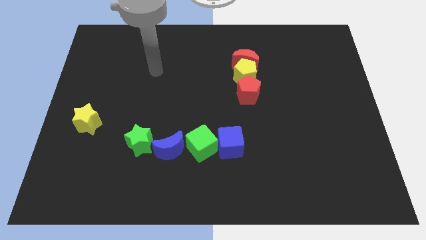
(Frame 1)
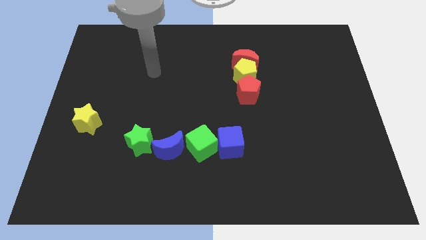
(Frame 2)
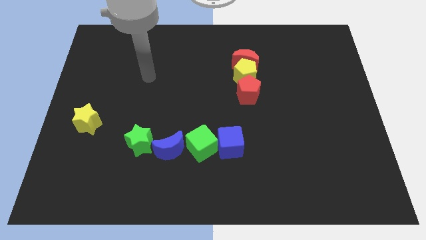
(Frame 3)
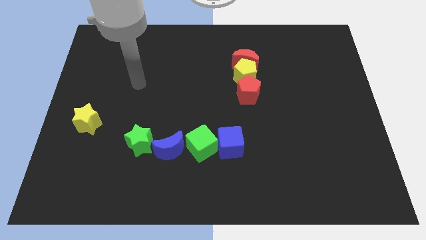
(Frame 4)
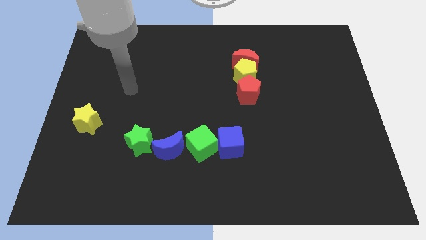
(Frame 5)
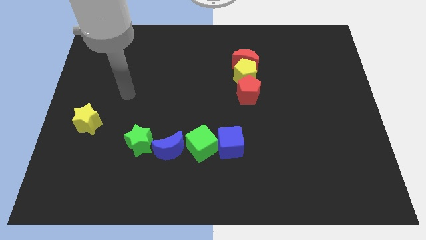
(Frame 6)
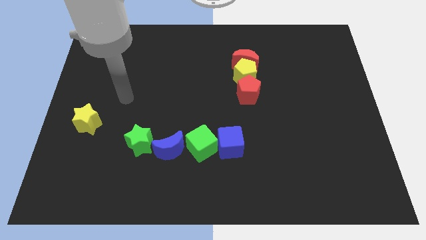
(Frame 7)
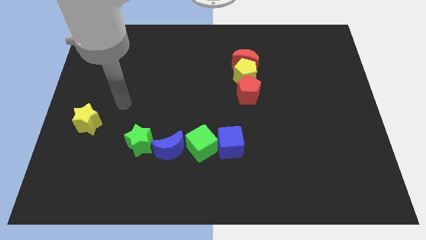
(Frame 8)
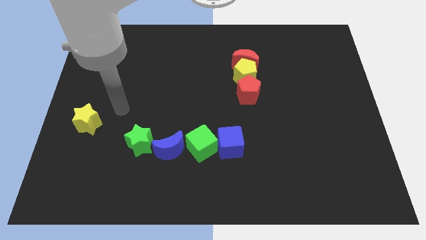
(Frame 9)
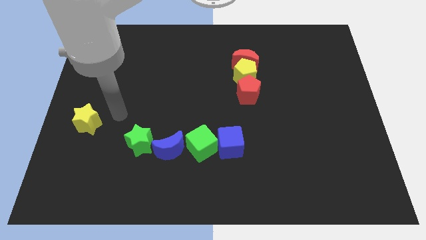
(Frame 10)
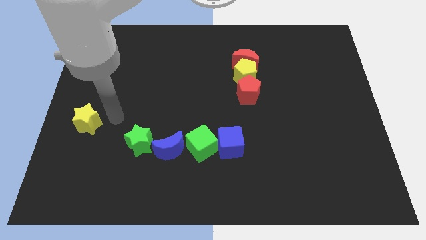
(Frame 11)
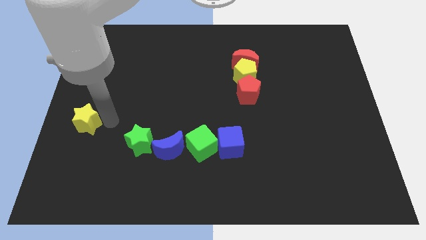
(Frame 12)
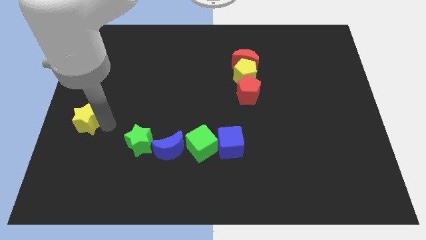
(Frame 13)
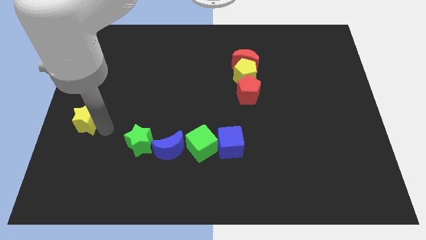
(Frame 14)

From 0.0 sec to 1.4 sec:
place your arm right to yellow star

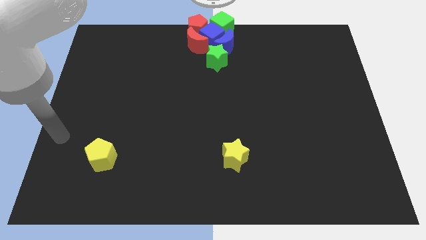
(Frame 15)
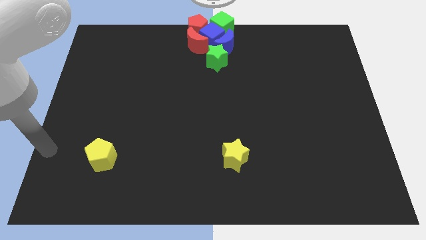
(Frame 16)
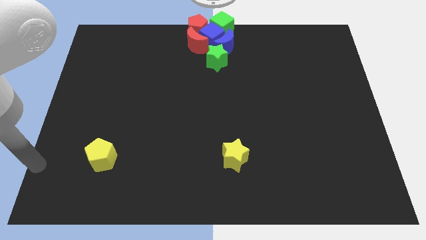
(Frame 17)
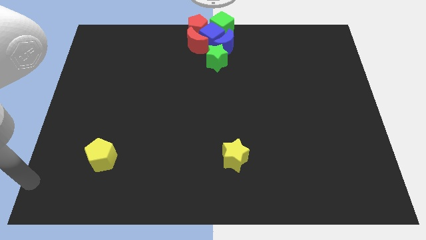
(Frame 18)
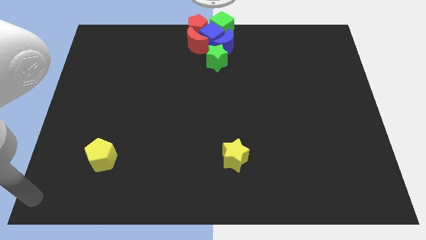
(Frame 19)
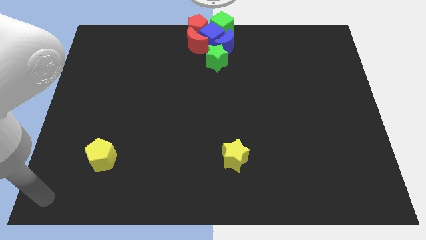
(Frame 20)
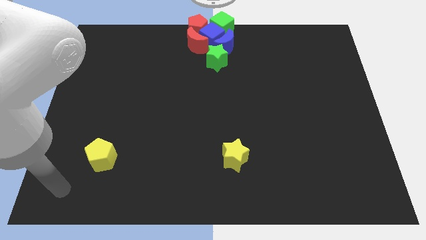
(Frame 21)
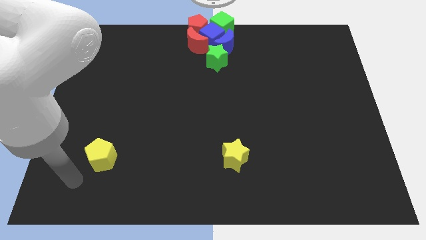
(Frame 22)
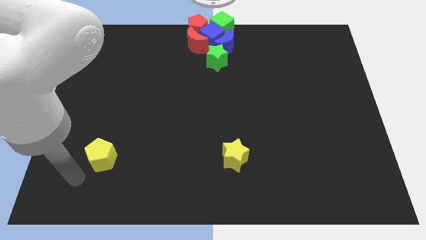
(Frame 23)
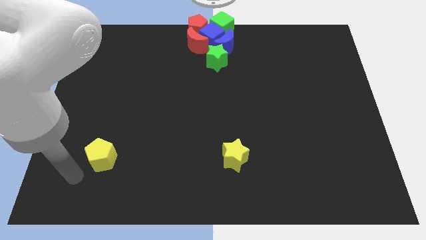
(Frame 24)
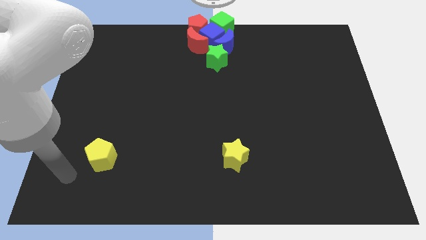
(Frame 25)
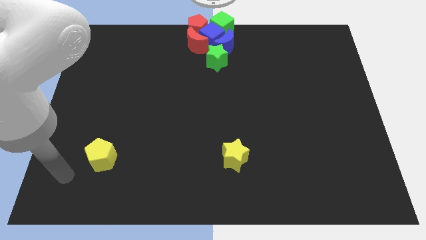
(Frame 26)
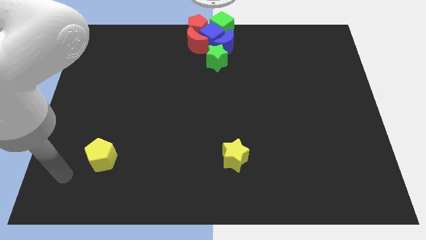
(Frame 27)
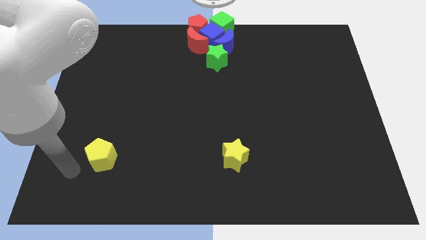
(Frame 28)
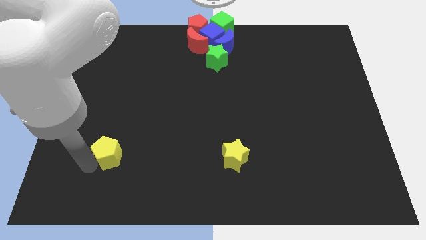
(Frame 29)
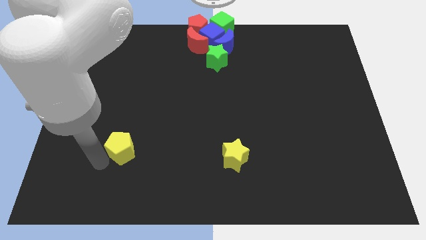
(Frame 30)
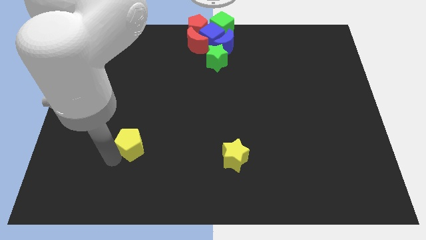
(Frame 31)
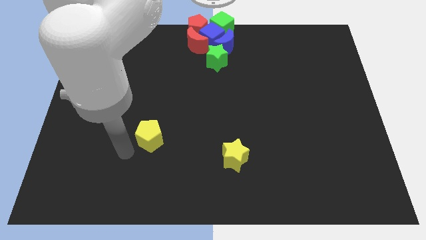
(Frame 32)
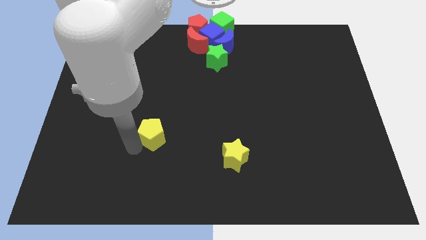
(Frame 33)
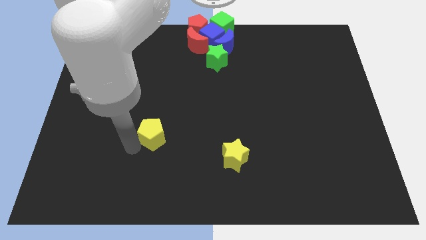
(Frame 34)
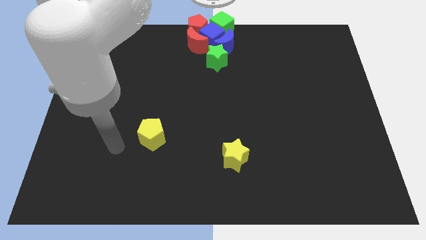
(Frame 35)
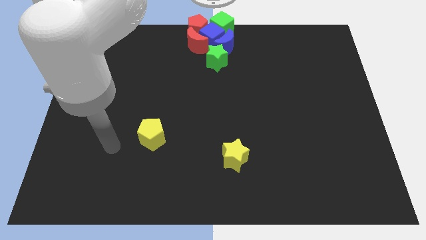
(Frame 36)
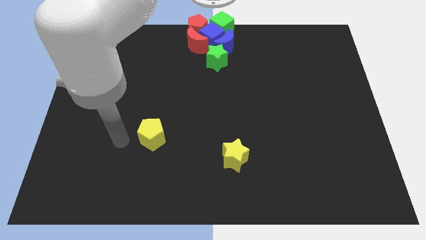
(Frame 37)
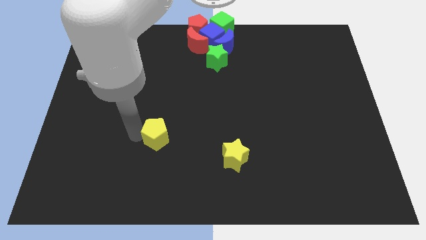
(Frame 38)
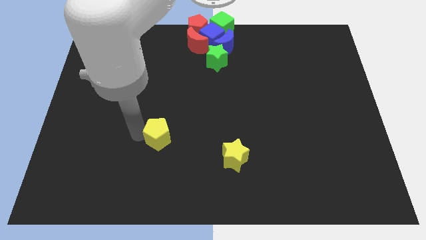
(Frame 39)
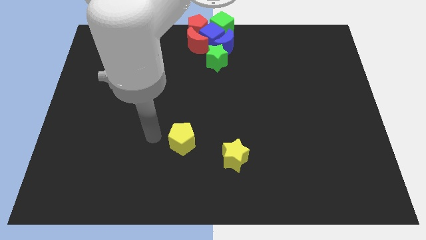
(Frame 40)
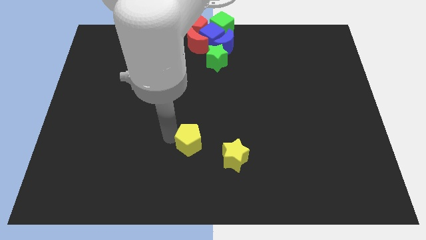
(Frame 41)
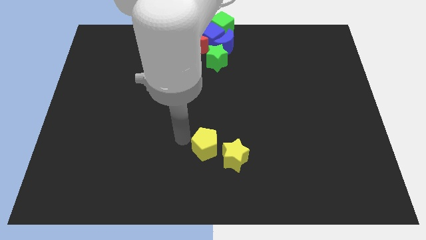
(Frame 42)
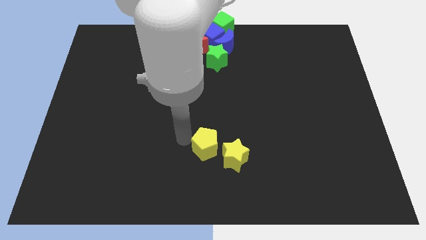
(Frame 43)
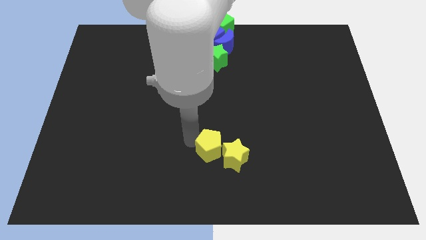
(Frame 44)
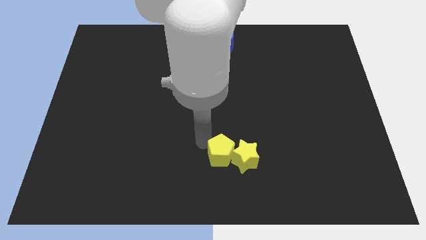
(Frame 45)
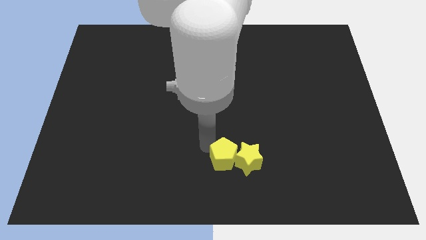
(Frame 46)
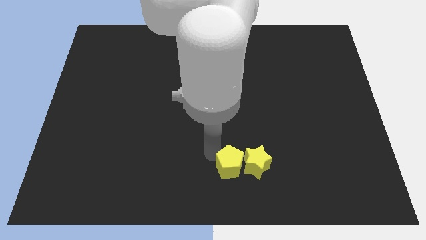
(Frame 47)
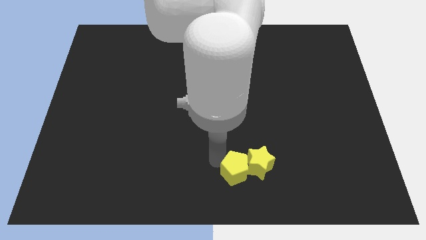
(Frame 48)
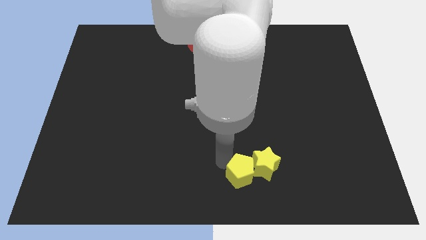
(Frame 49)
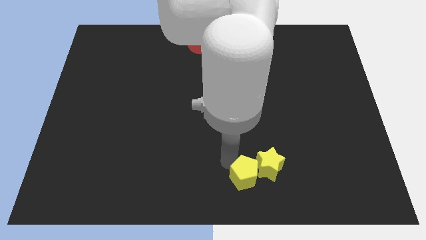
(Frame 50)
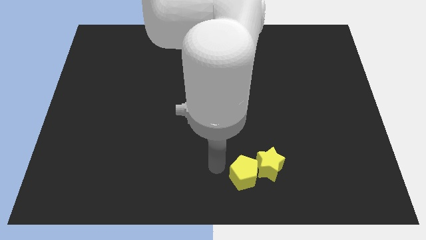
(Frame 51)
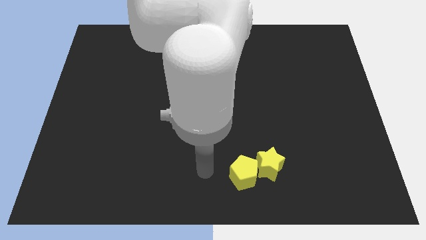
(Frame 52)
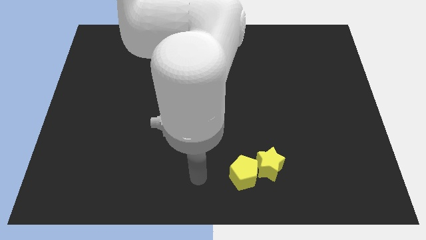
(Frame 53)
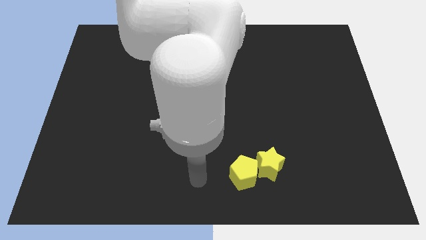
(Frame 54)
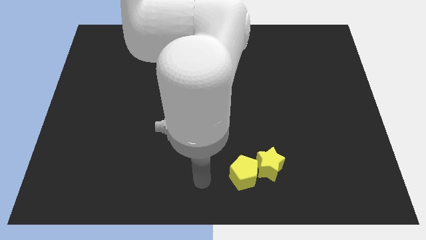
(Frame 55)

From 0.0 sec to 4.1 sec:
push the yellow pentagon to the bottom center

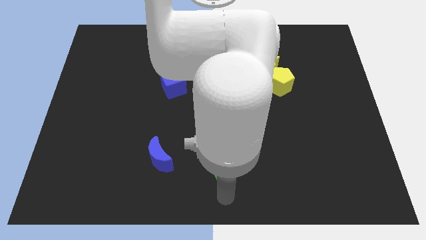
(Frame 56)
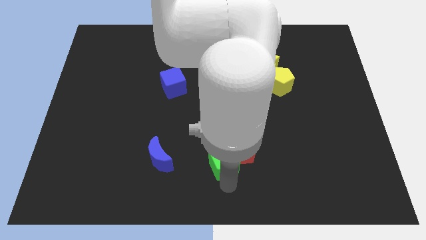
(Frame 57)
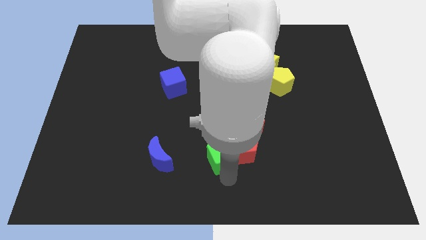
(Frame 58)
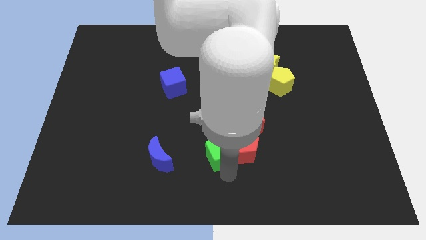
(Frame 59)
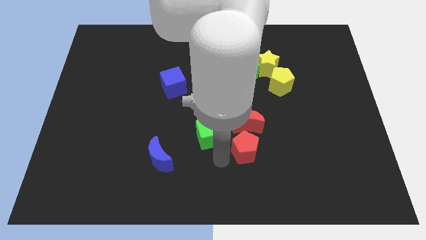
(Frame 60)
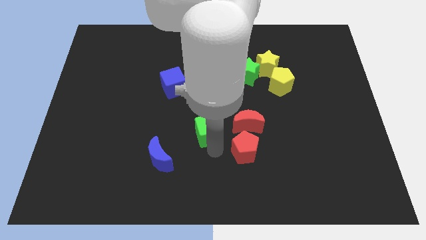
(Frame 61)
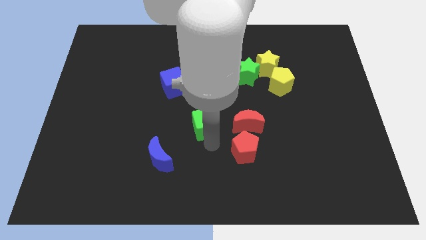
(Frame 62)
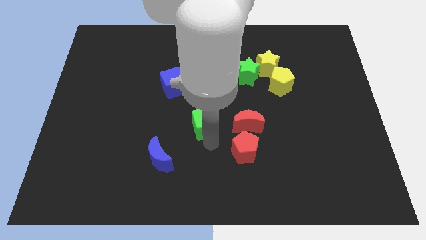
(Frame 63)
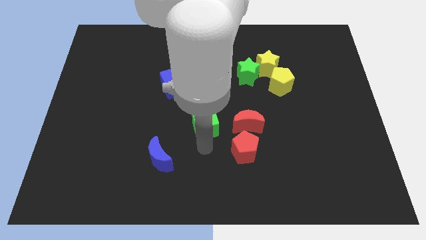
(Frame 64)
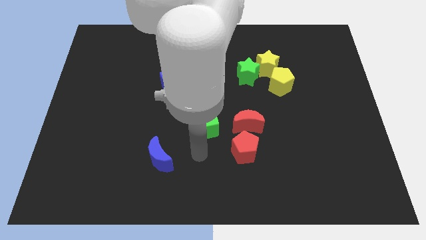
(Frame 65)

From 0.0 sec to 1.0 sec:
move the green cube to the left of the red crescent

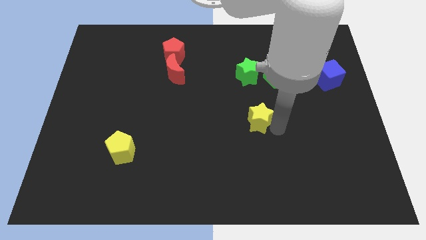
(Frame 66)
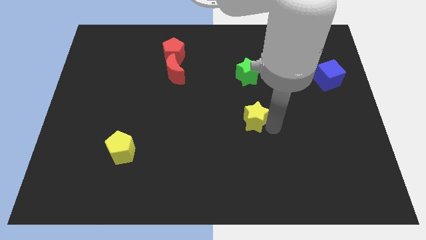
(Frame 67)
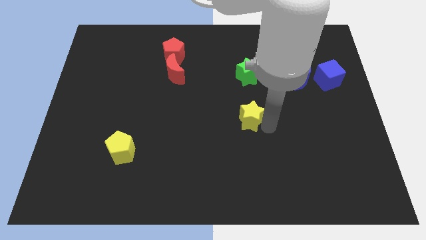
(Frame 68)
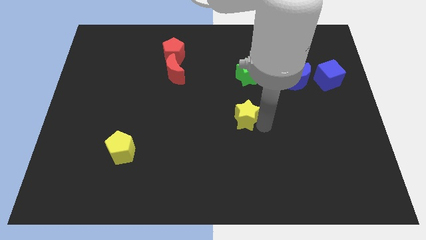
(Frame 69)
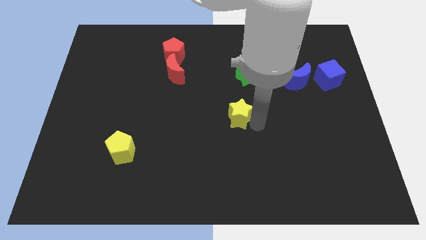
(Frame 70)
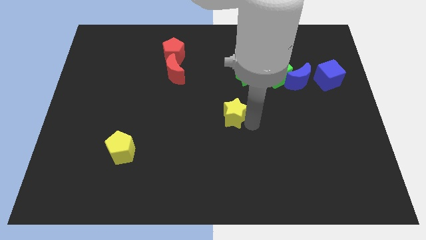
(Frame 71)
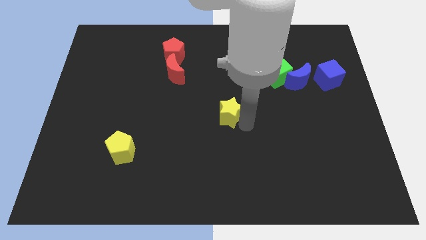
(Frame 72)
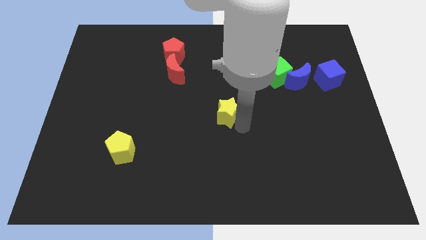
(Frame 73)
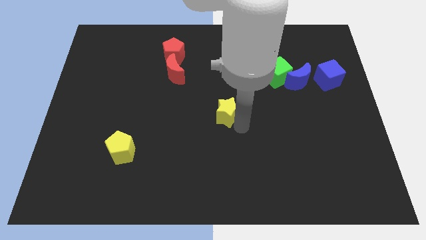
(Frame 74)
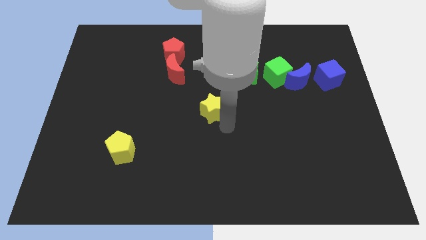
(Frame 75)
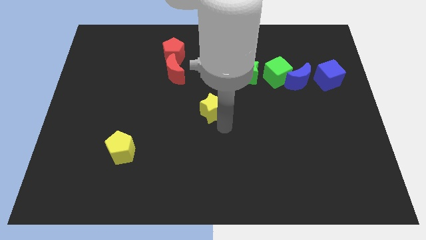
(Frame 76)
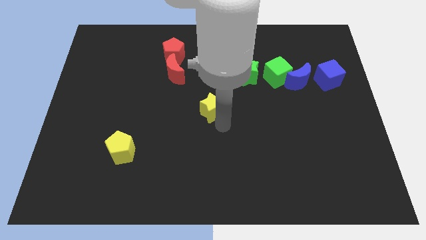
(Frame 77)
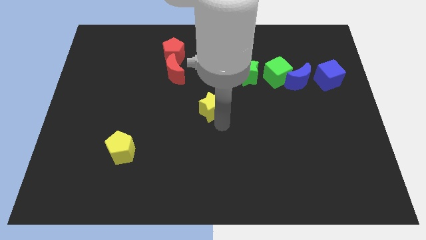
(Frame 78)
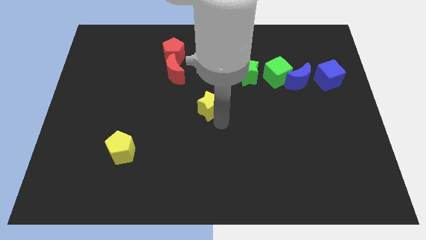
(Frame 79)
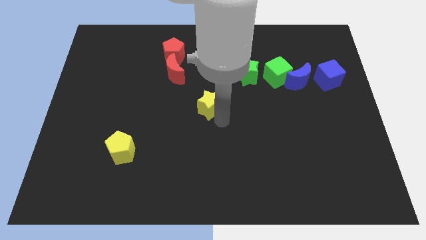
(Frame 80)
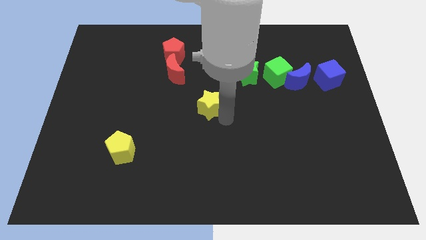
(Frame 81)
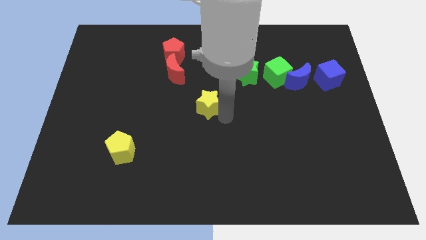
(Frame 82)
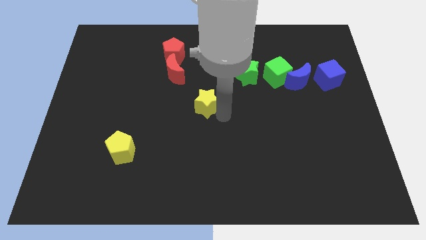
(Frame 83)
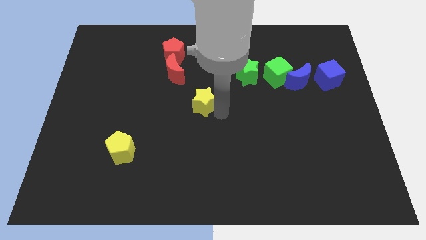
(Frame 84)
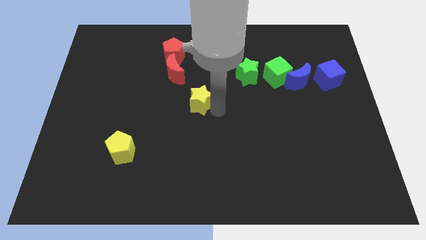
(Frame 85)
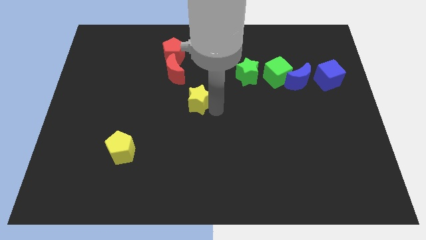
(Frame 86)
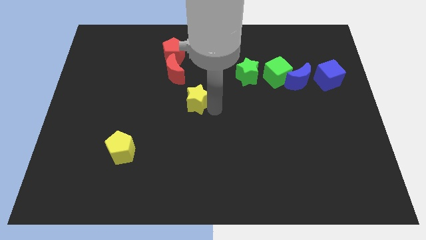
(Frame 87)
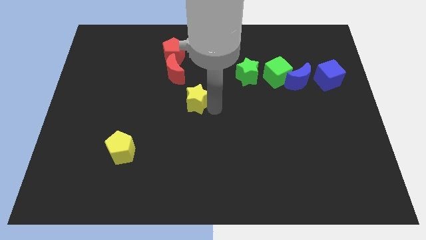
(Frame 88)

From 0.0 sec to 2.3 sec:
push the yellow star towards the red moon

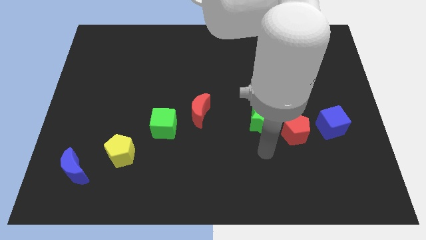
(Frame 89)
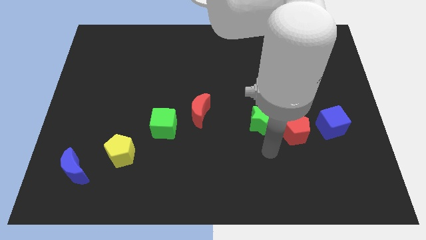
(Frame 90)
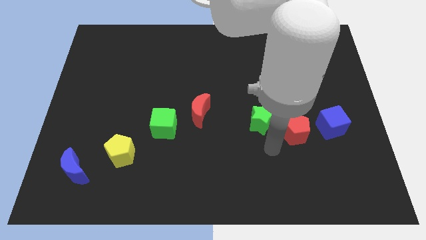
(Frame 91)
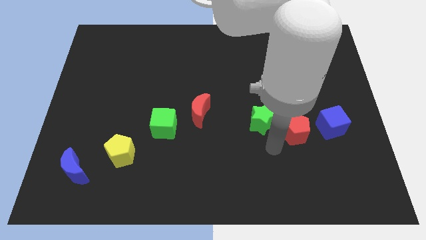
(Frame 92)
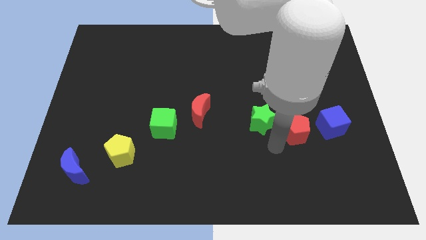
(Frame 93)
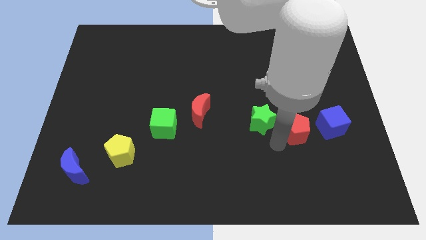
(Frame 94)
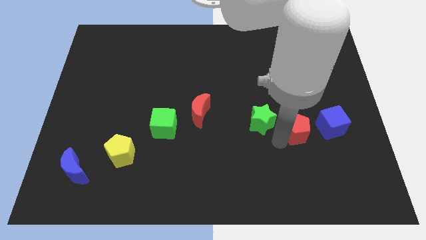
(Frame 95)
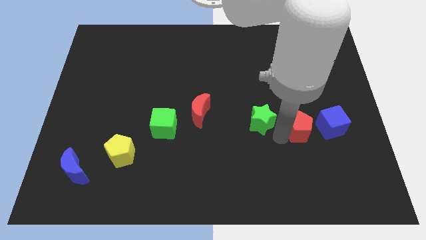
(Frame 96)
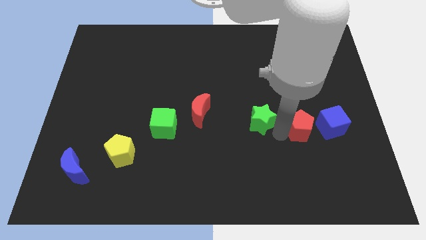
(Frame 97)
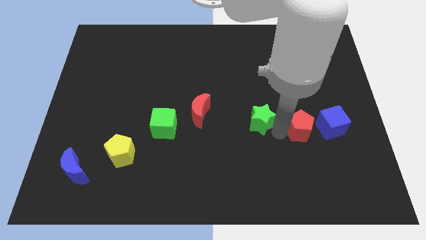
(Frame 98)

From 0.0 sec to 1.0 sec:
move the red pentagon slightly to left of the blue cube
